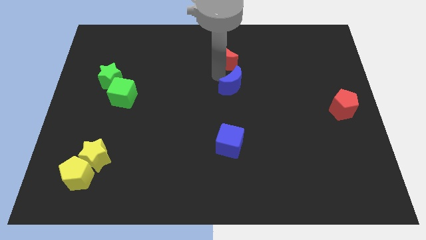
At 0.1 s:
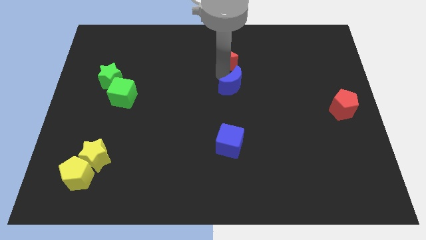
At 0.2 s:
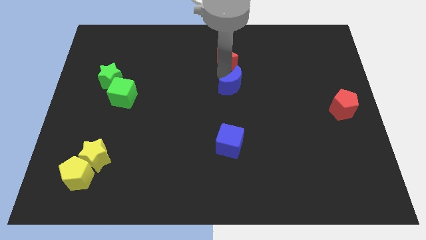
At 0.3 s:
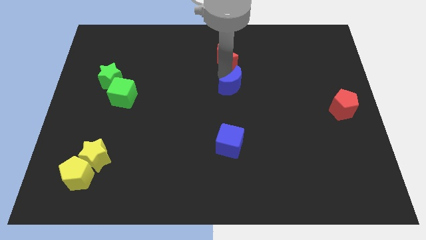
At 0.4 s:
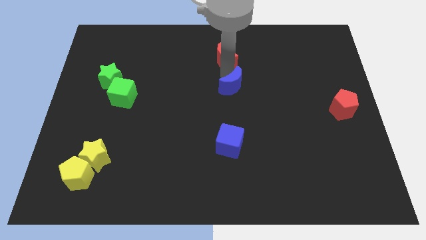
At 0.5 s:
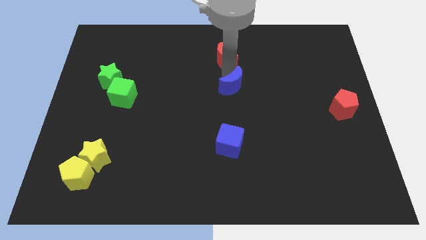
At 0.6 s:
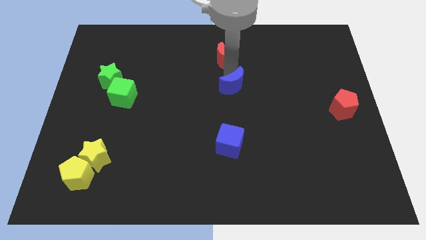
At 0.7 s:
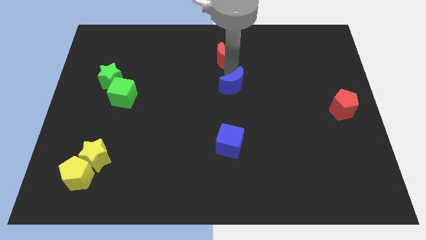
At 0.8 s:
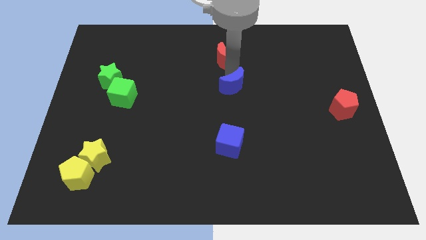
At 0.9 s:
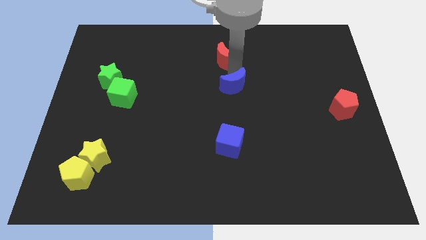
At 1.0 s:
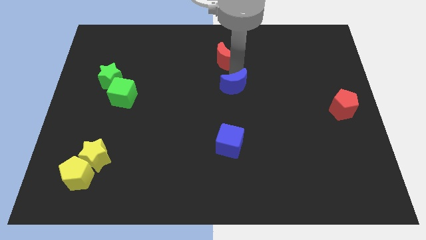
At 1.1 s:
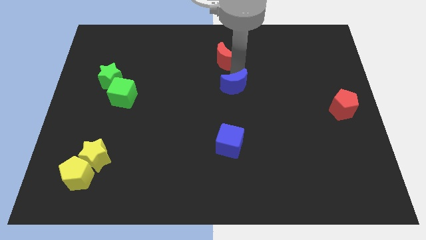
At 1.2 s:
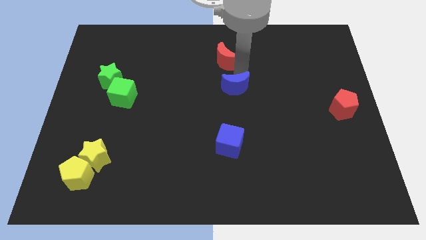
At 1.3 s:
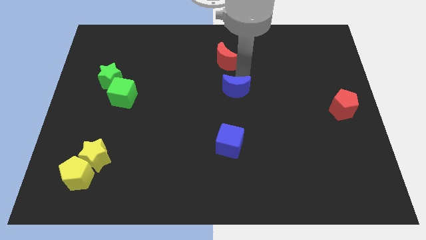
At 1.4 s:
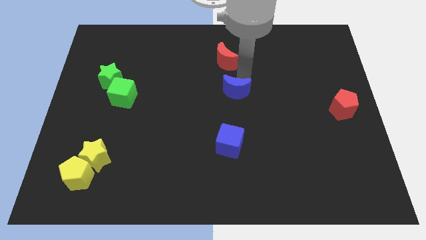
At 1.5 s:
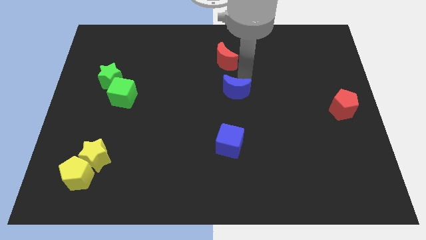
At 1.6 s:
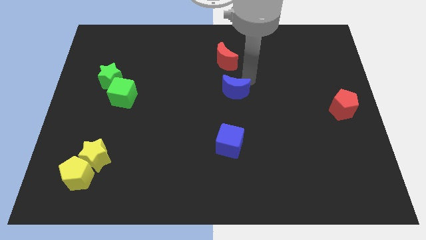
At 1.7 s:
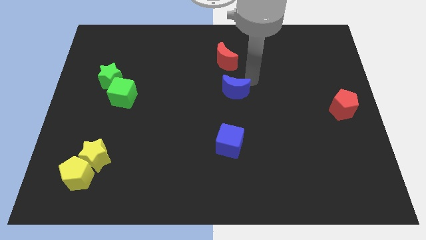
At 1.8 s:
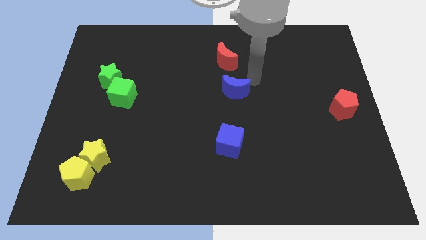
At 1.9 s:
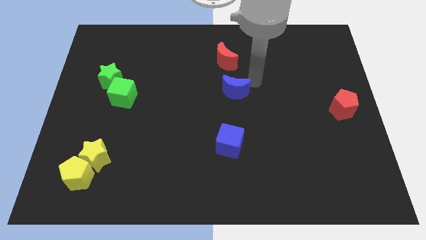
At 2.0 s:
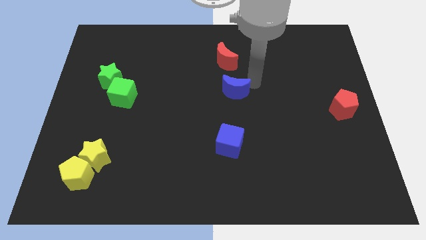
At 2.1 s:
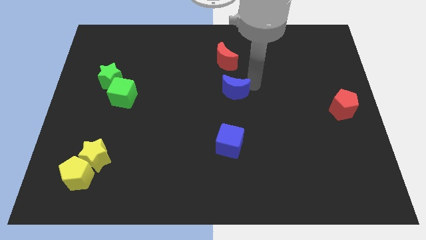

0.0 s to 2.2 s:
separate the blue crescent from the red crescent

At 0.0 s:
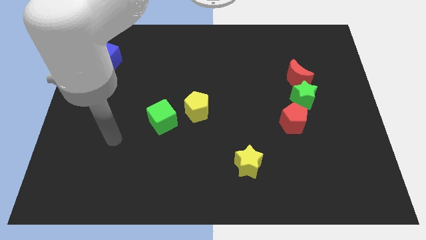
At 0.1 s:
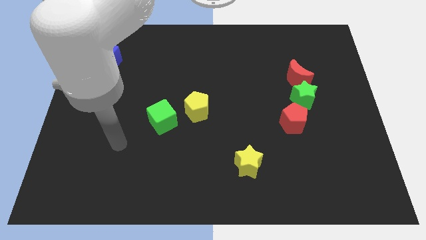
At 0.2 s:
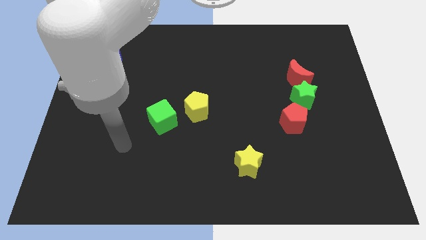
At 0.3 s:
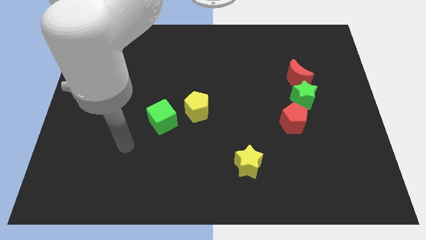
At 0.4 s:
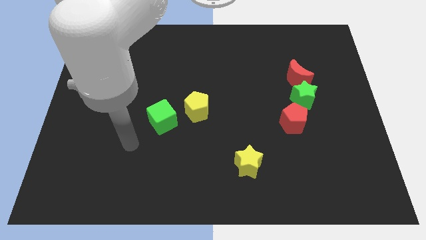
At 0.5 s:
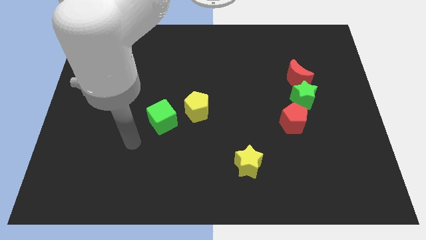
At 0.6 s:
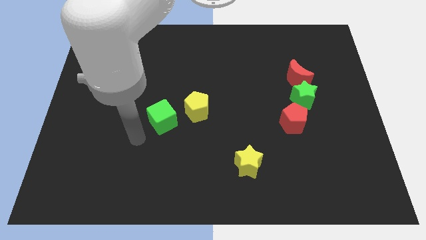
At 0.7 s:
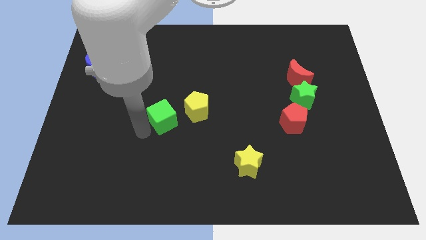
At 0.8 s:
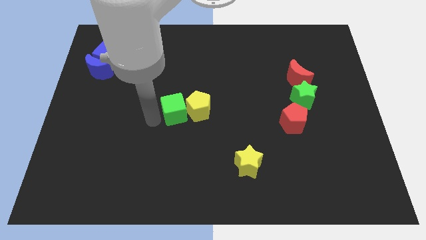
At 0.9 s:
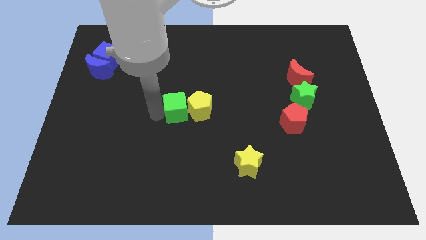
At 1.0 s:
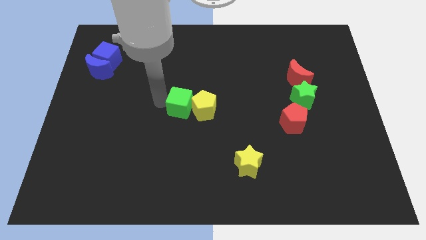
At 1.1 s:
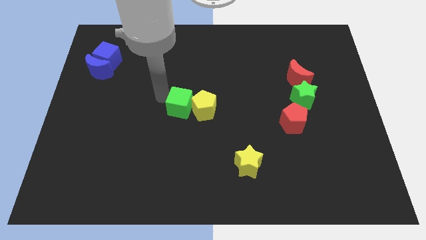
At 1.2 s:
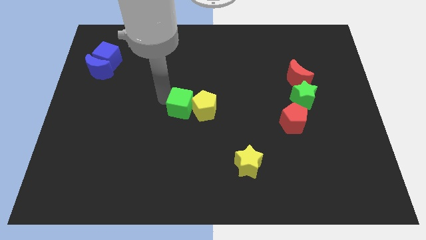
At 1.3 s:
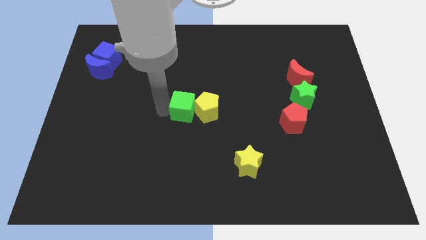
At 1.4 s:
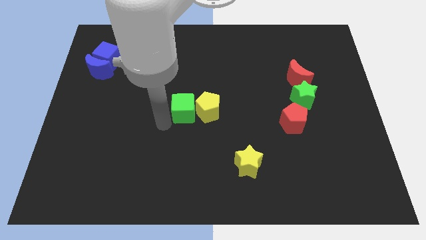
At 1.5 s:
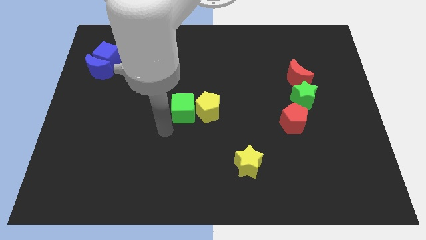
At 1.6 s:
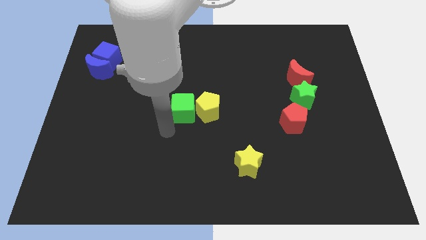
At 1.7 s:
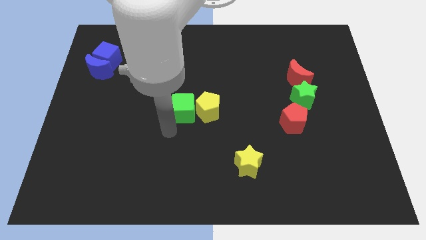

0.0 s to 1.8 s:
slide the green cube into the yellow pentagon

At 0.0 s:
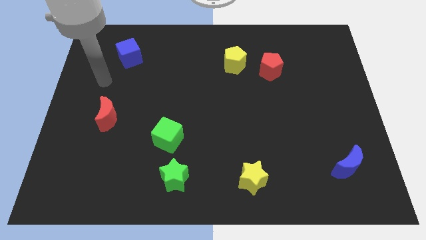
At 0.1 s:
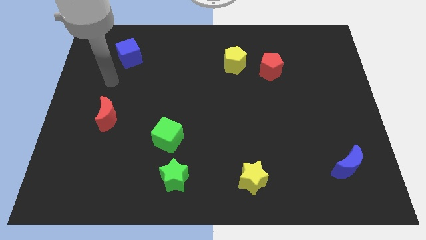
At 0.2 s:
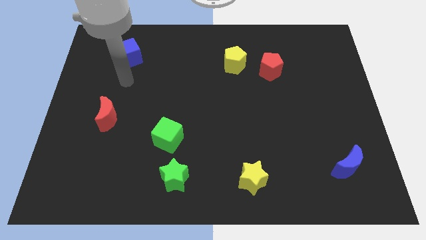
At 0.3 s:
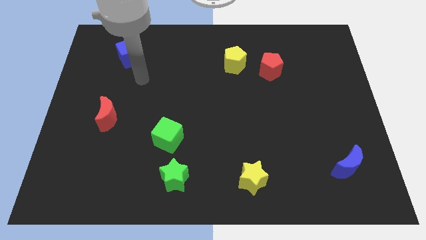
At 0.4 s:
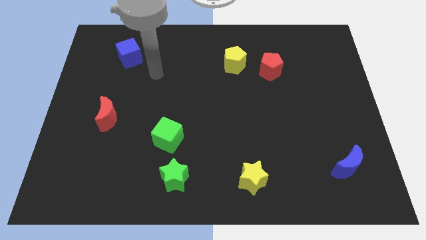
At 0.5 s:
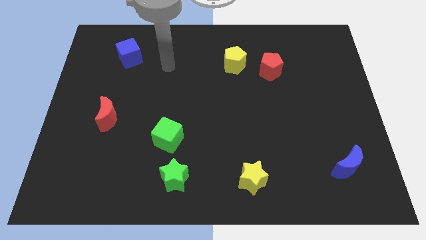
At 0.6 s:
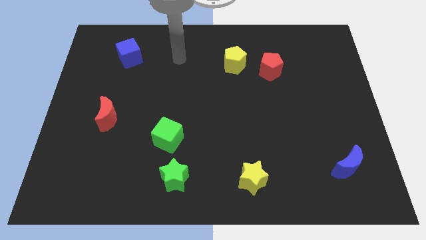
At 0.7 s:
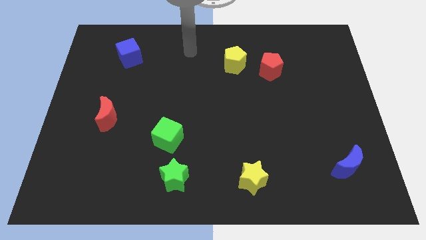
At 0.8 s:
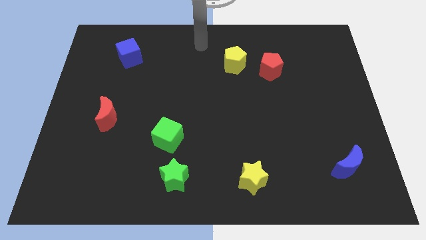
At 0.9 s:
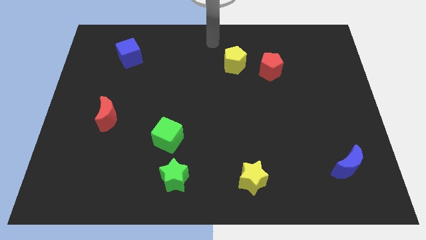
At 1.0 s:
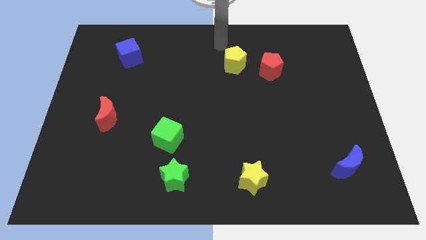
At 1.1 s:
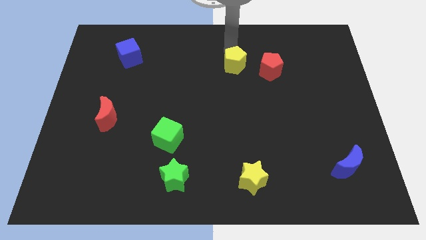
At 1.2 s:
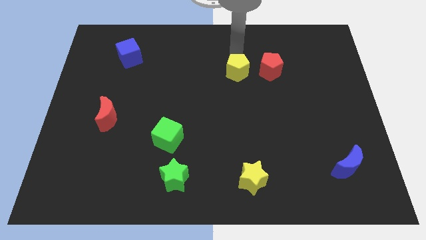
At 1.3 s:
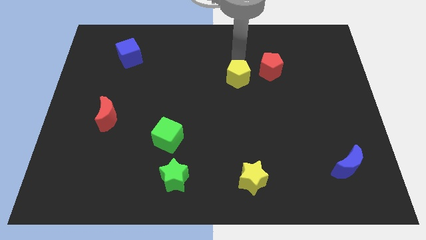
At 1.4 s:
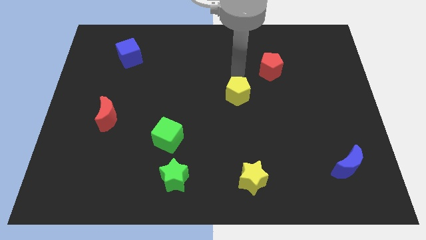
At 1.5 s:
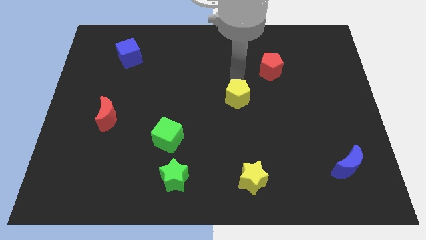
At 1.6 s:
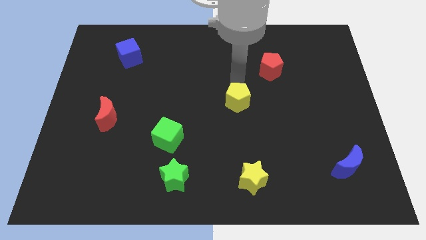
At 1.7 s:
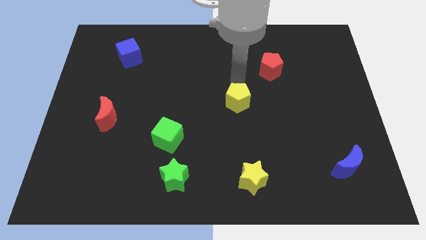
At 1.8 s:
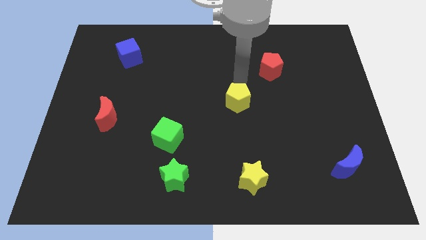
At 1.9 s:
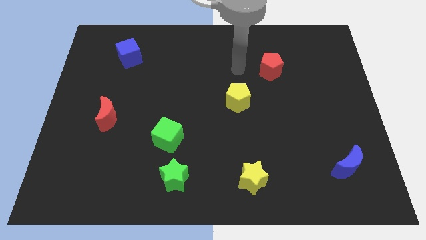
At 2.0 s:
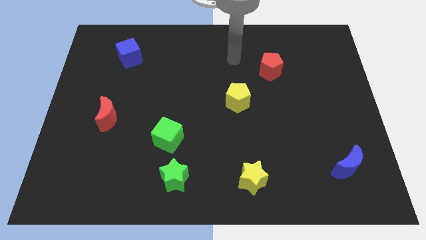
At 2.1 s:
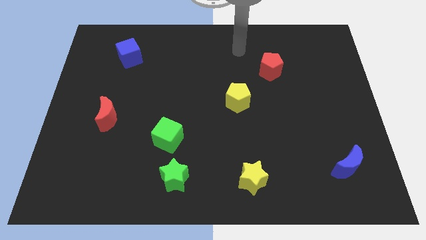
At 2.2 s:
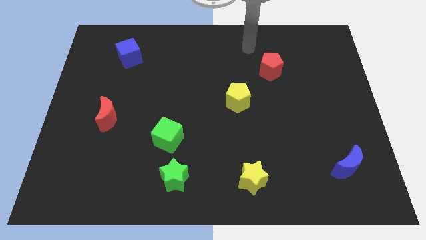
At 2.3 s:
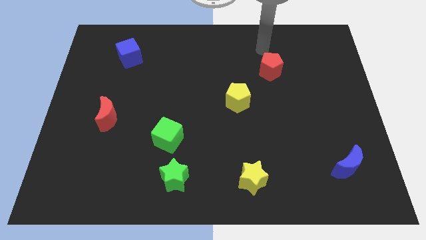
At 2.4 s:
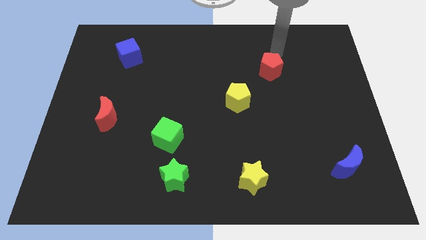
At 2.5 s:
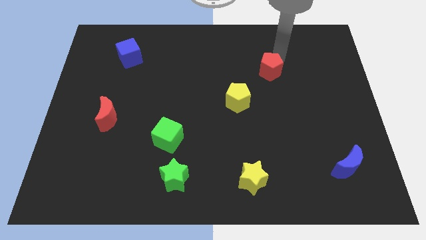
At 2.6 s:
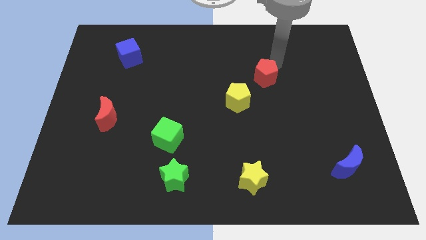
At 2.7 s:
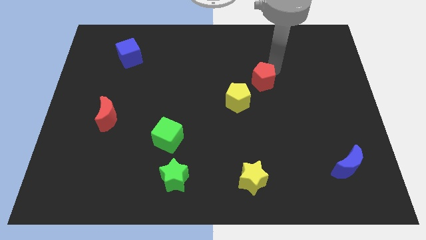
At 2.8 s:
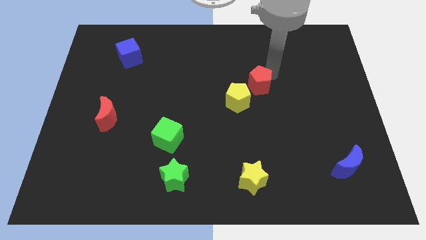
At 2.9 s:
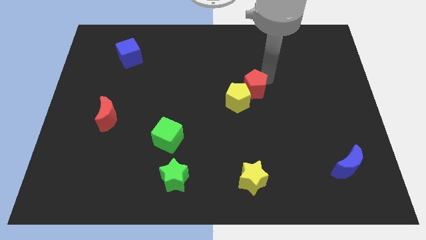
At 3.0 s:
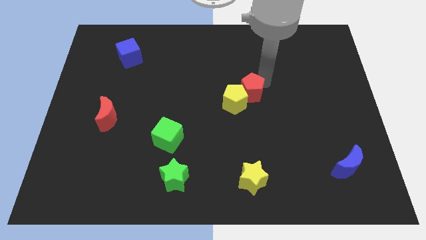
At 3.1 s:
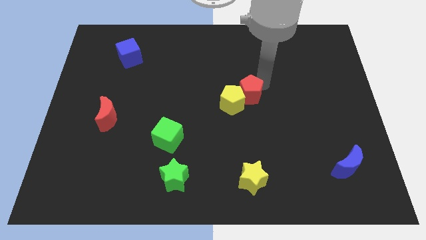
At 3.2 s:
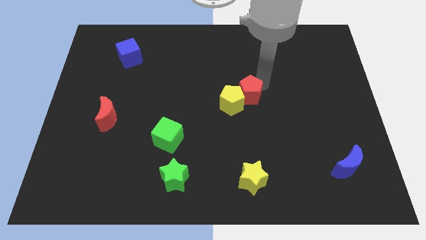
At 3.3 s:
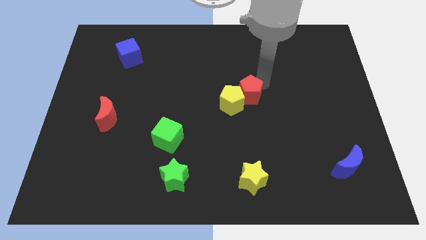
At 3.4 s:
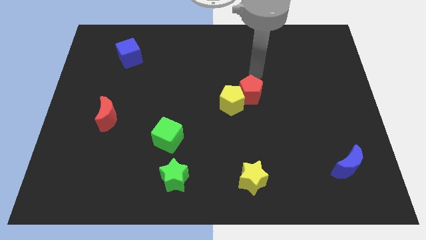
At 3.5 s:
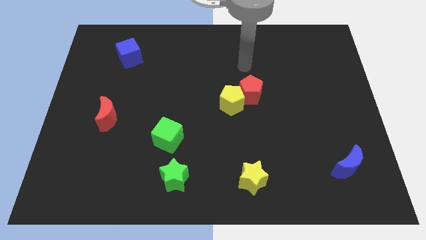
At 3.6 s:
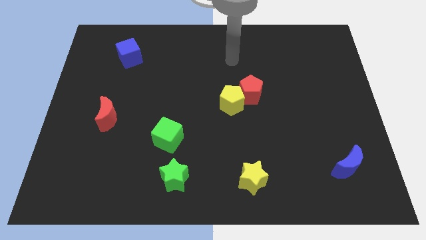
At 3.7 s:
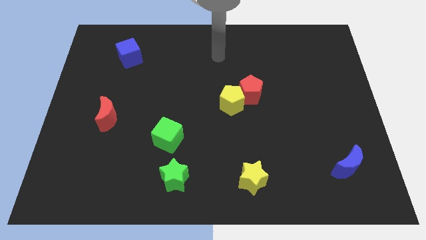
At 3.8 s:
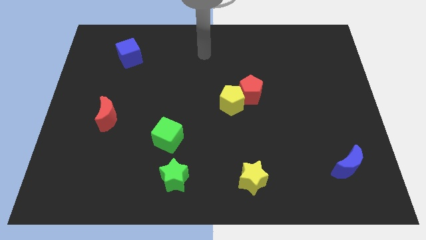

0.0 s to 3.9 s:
push both yellow pentagon and red pentagon towards the center of the board

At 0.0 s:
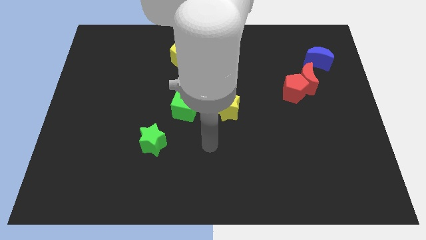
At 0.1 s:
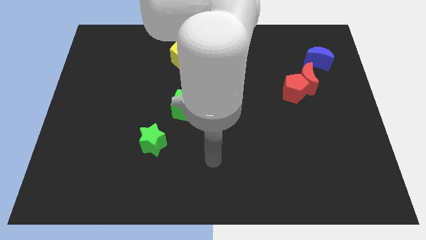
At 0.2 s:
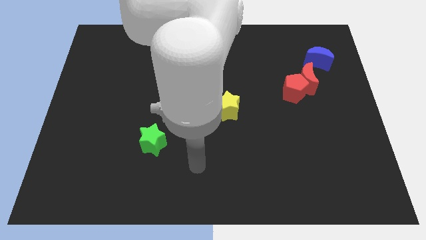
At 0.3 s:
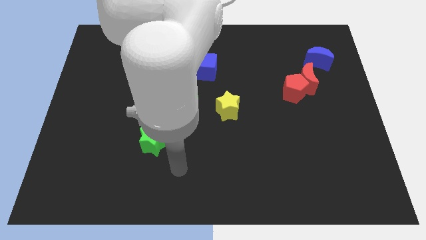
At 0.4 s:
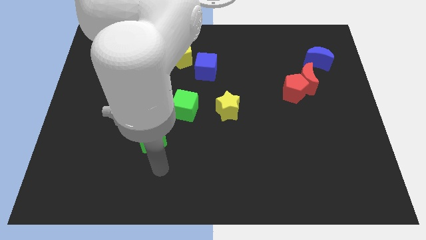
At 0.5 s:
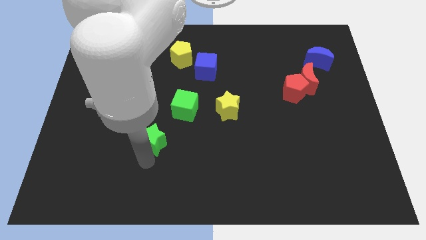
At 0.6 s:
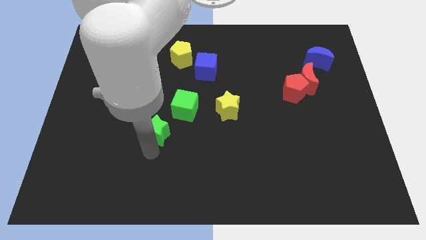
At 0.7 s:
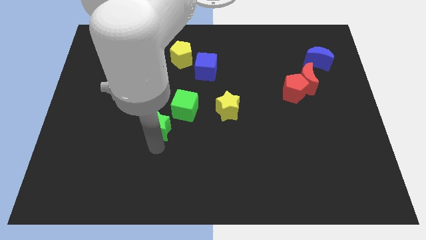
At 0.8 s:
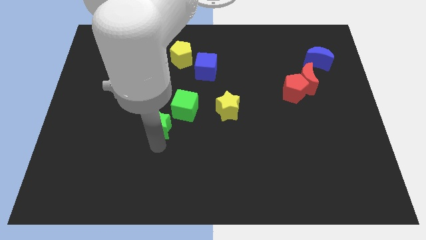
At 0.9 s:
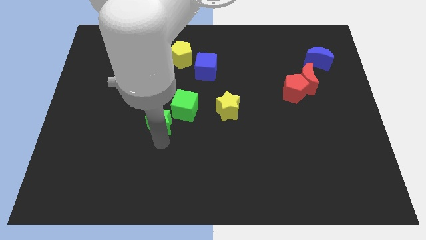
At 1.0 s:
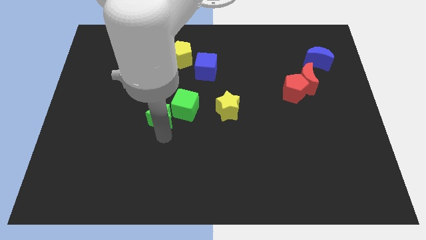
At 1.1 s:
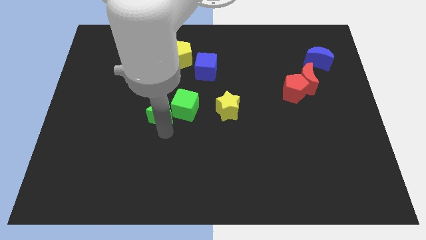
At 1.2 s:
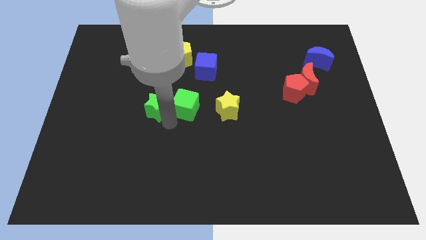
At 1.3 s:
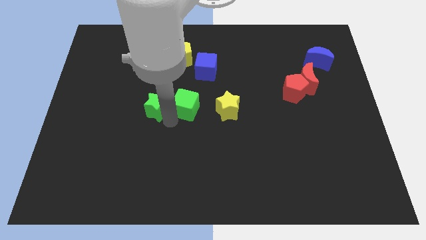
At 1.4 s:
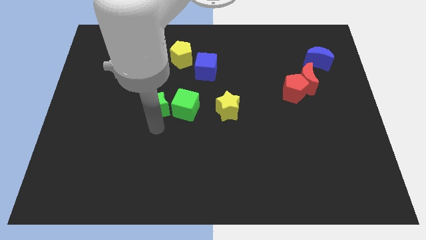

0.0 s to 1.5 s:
push the green star to the left of the green cube
